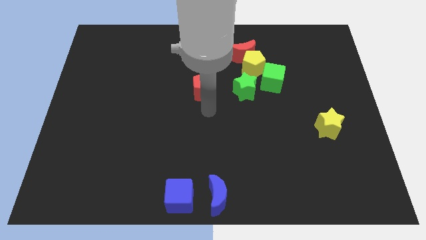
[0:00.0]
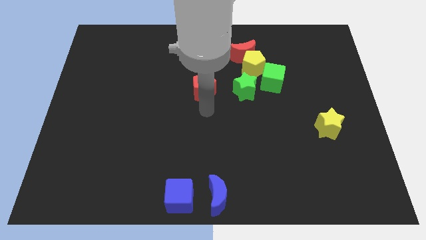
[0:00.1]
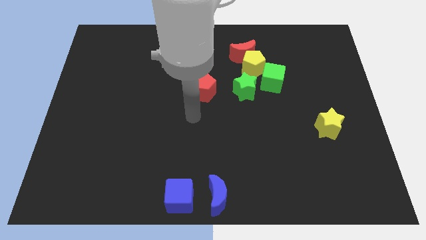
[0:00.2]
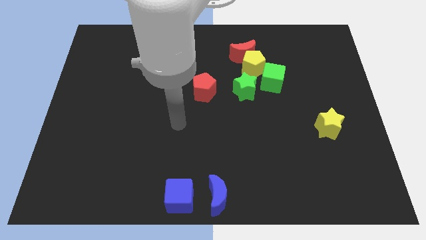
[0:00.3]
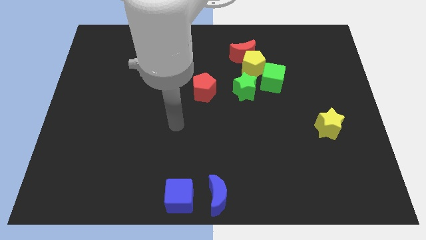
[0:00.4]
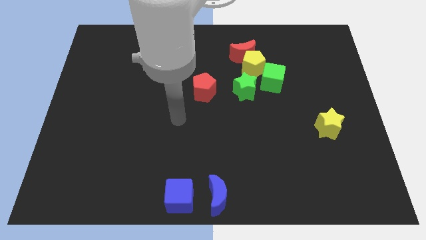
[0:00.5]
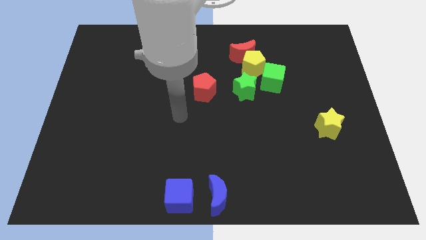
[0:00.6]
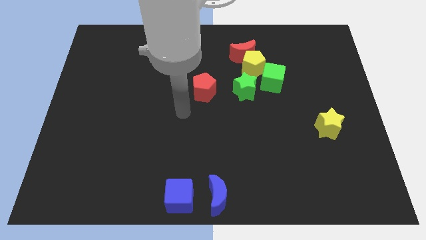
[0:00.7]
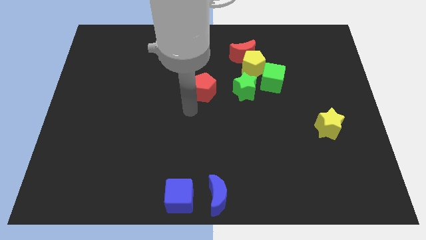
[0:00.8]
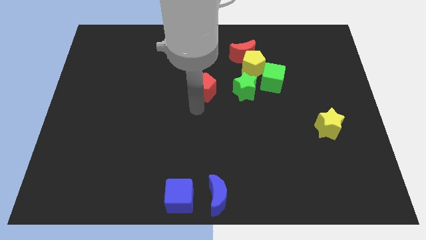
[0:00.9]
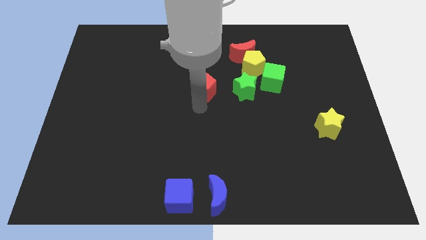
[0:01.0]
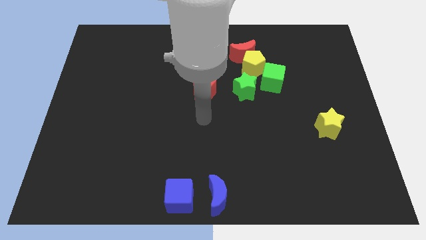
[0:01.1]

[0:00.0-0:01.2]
place arm at the bottom of red pentagon

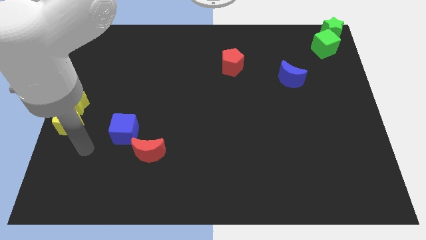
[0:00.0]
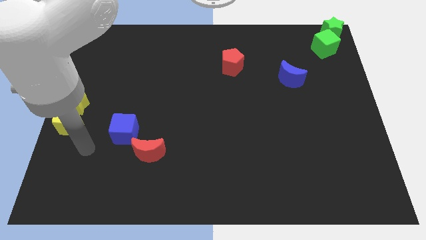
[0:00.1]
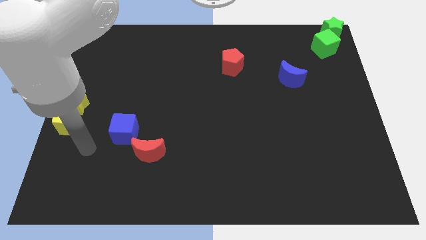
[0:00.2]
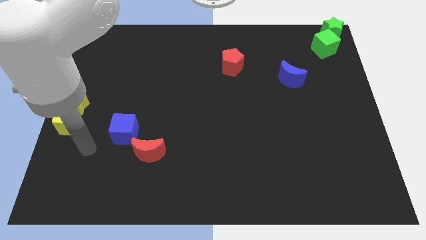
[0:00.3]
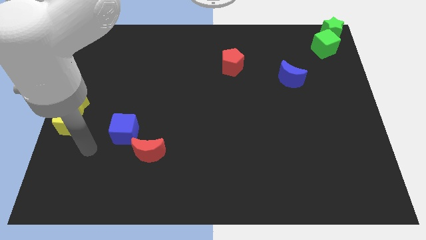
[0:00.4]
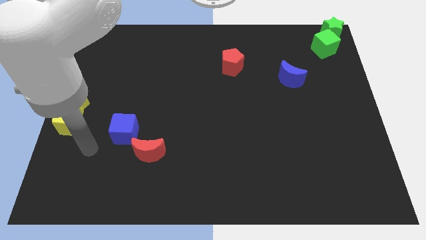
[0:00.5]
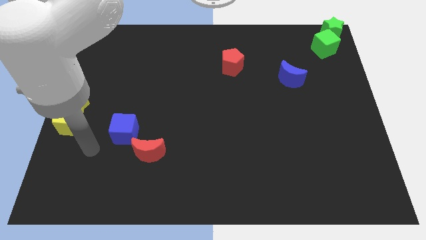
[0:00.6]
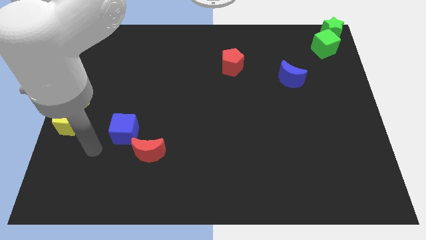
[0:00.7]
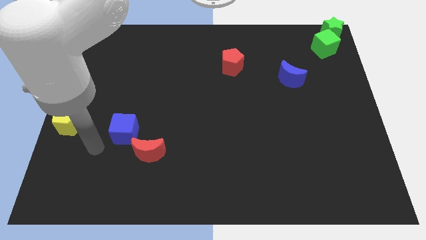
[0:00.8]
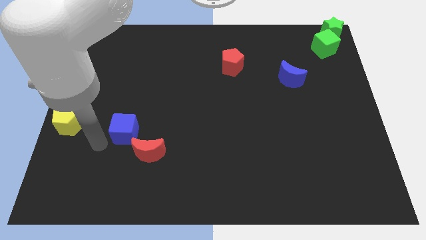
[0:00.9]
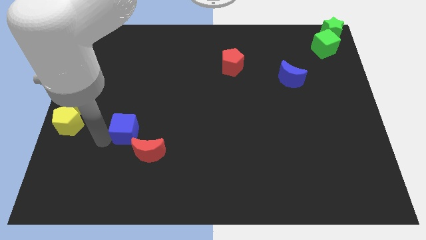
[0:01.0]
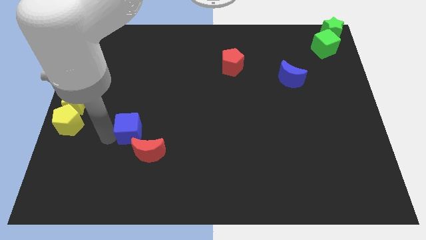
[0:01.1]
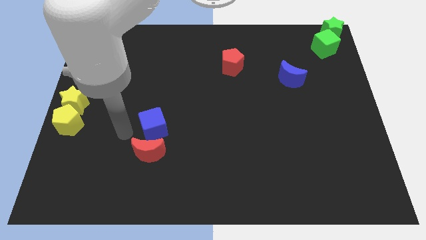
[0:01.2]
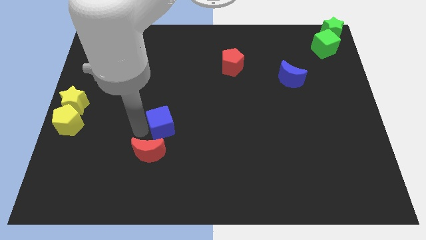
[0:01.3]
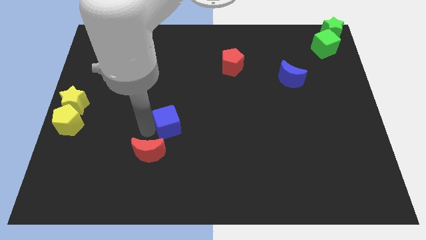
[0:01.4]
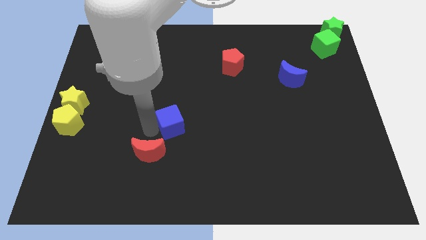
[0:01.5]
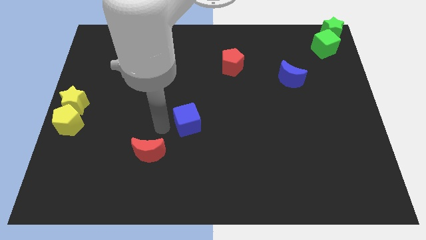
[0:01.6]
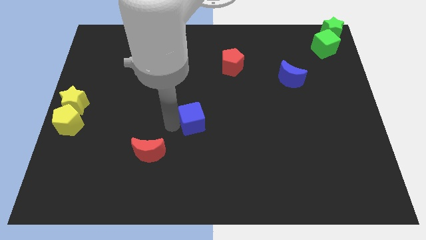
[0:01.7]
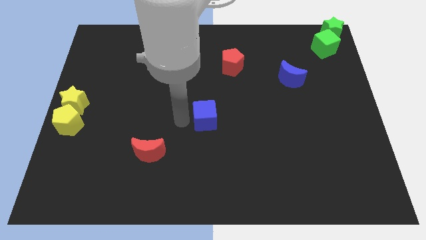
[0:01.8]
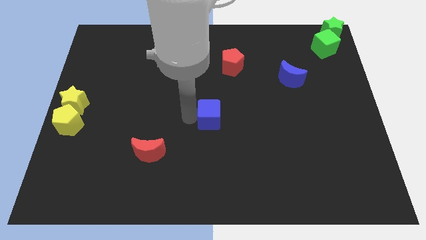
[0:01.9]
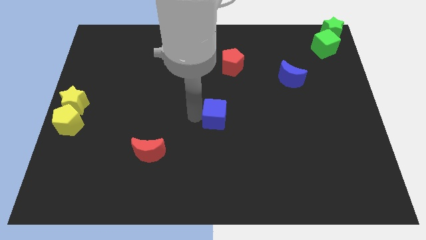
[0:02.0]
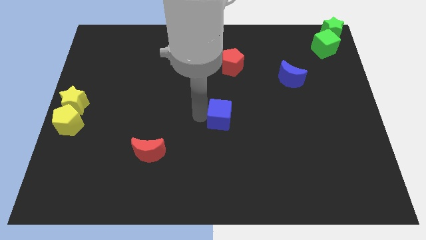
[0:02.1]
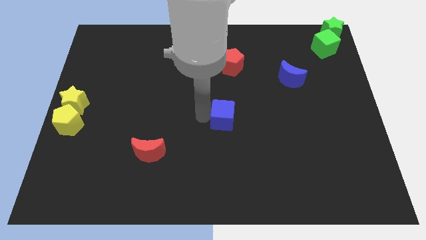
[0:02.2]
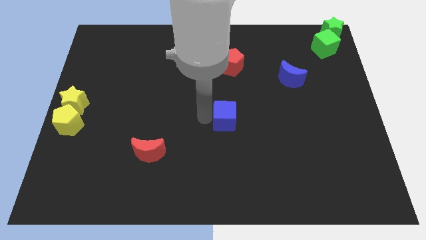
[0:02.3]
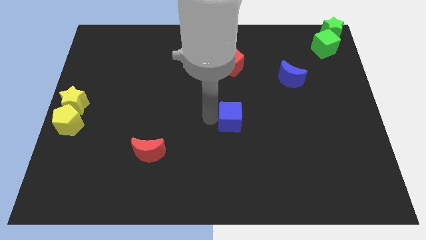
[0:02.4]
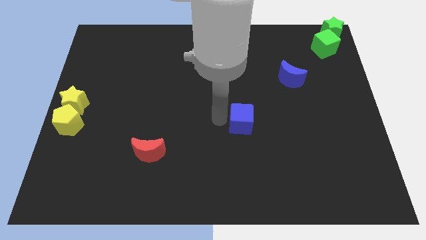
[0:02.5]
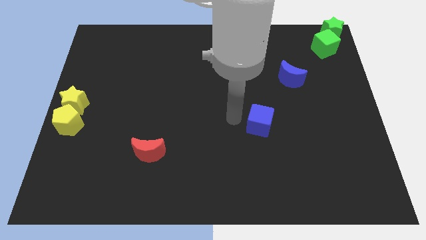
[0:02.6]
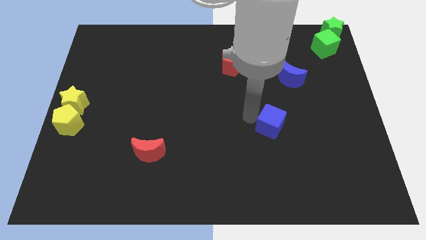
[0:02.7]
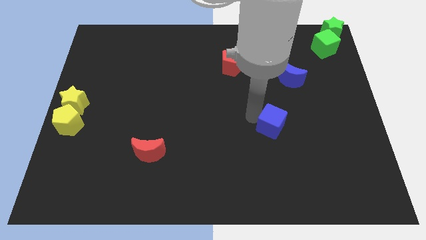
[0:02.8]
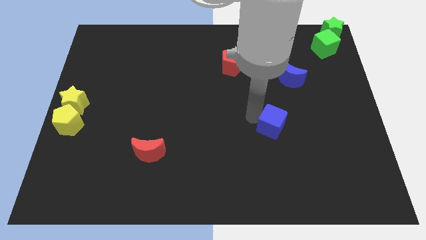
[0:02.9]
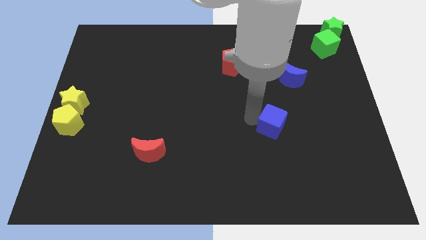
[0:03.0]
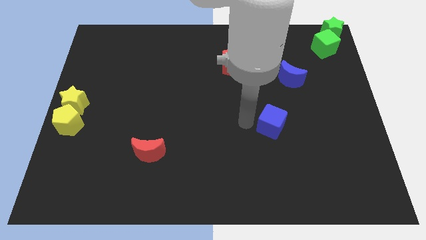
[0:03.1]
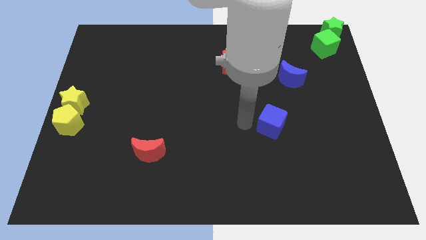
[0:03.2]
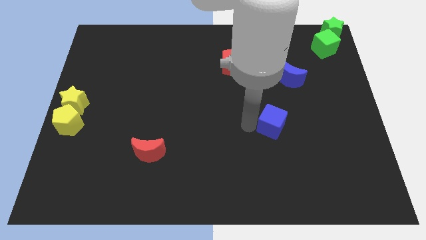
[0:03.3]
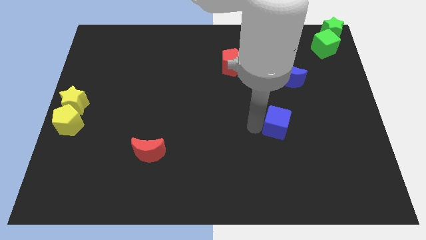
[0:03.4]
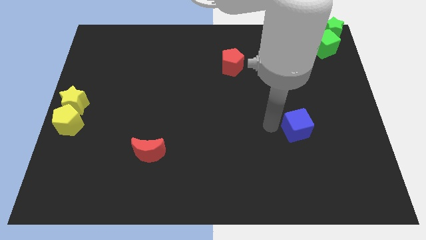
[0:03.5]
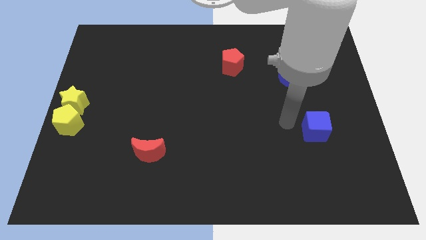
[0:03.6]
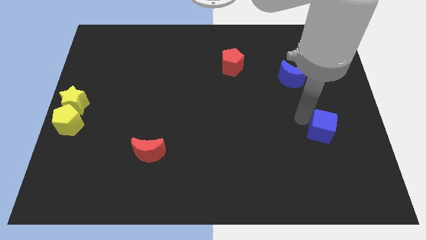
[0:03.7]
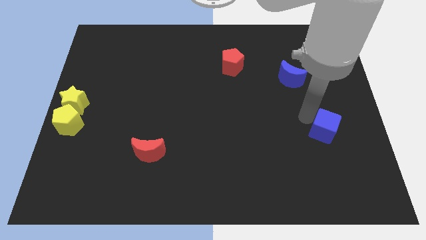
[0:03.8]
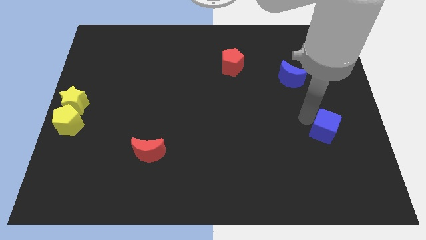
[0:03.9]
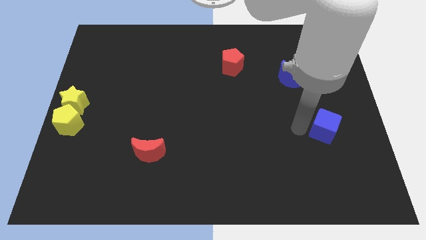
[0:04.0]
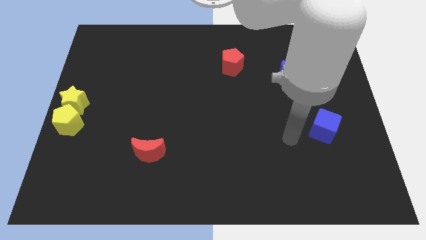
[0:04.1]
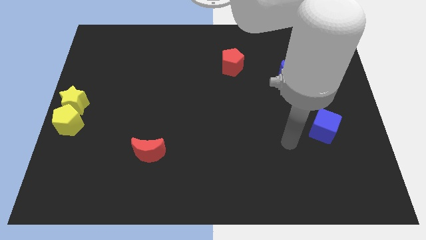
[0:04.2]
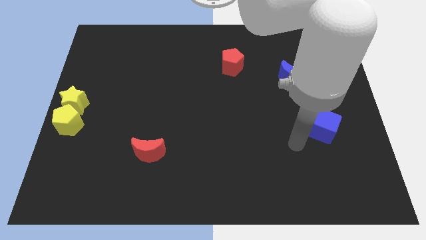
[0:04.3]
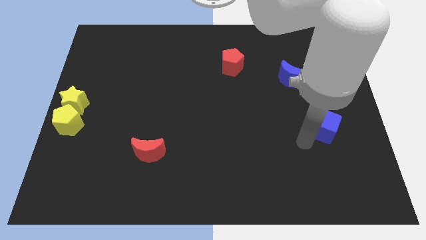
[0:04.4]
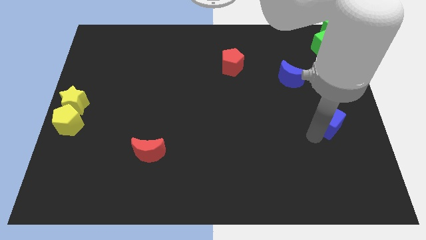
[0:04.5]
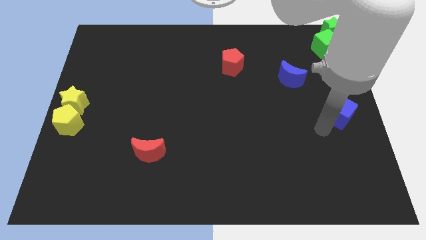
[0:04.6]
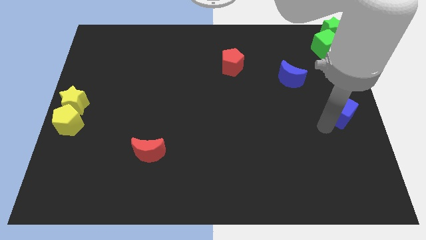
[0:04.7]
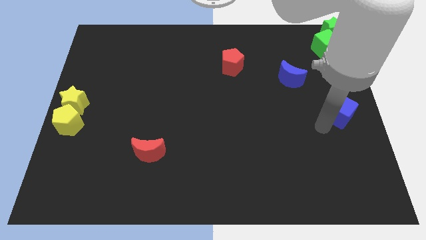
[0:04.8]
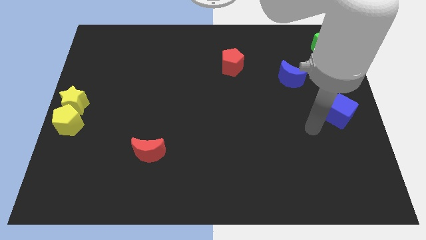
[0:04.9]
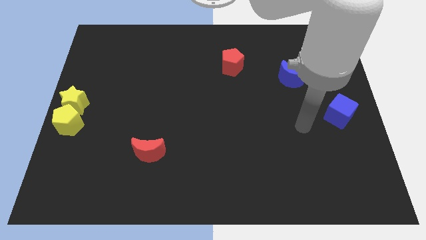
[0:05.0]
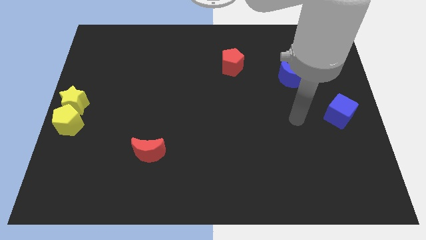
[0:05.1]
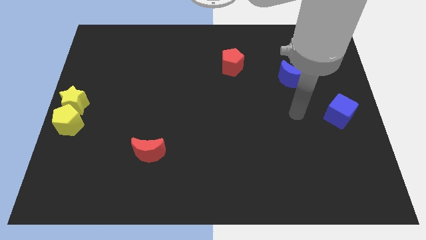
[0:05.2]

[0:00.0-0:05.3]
push the blue cube right center to the board

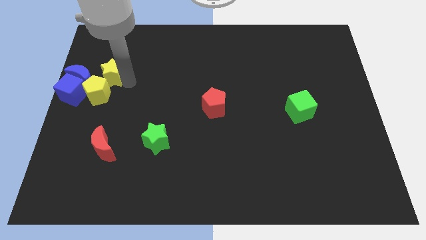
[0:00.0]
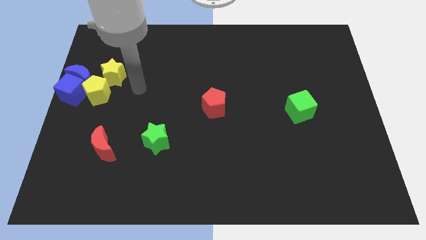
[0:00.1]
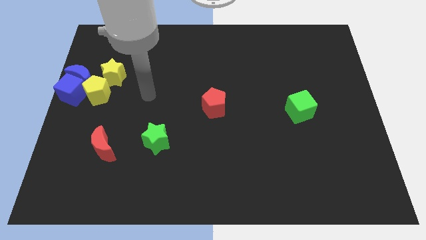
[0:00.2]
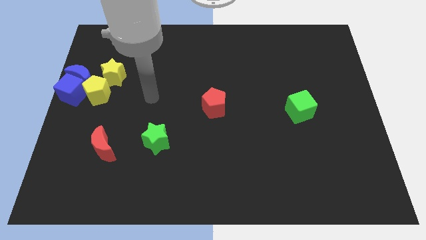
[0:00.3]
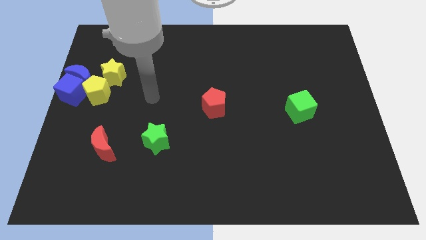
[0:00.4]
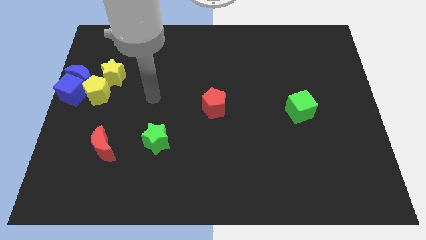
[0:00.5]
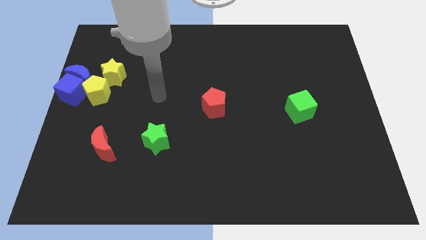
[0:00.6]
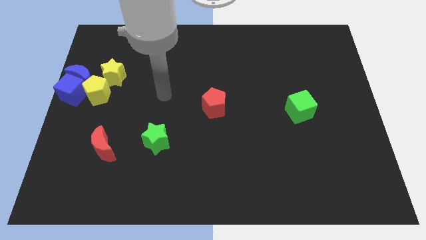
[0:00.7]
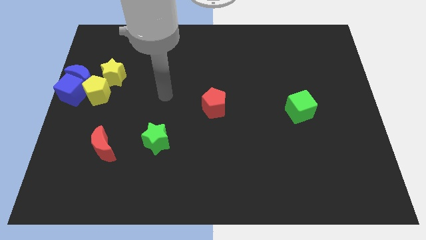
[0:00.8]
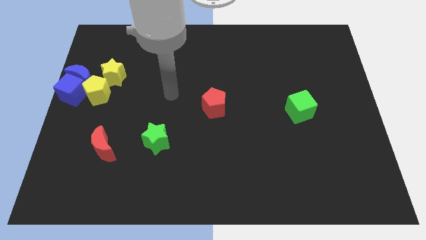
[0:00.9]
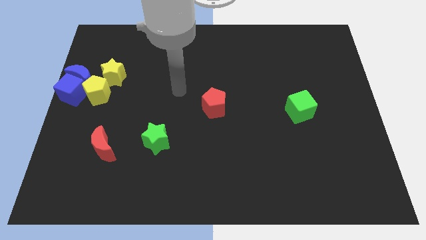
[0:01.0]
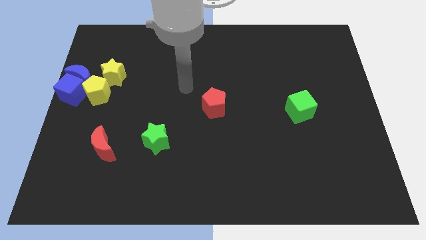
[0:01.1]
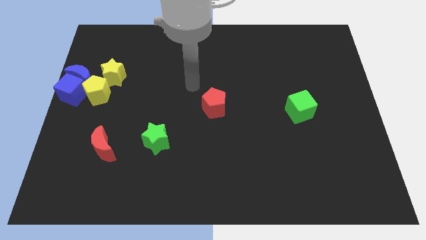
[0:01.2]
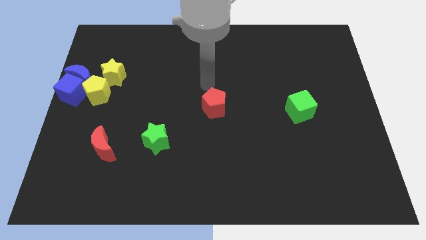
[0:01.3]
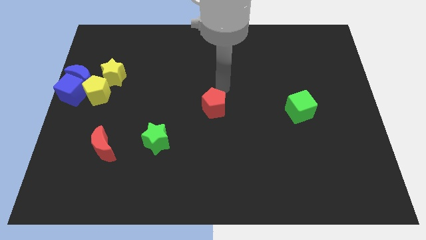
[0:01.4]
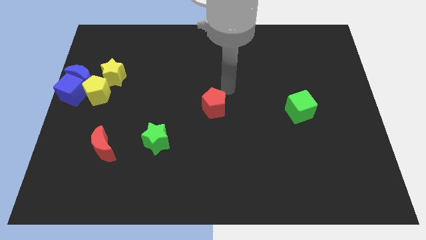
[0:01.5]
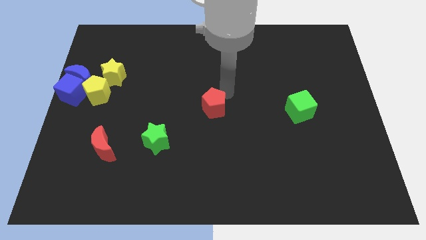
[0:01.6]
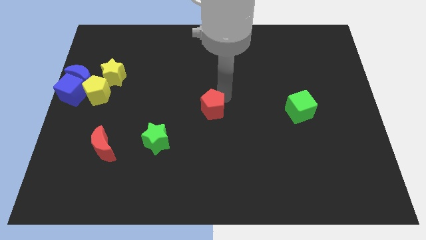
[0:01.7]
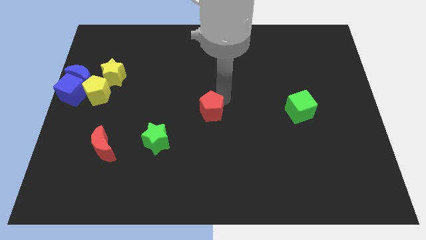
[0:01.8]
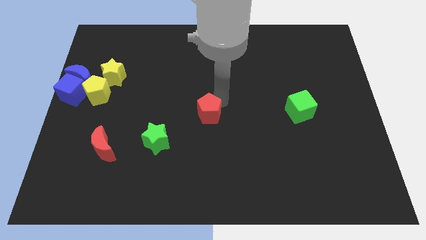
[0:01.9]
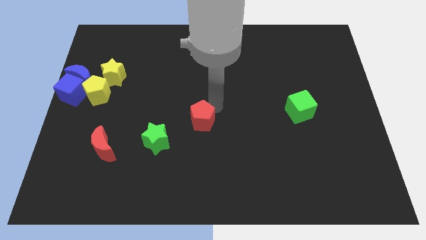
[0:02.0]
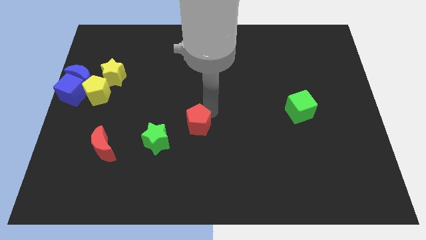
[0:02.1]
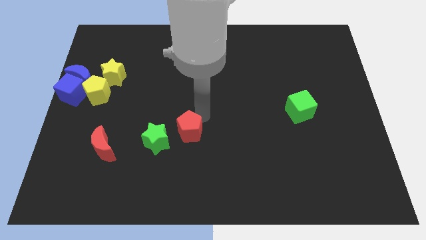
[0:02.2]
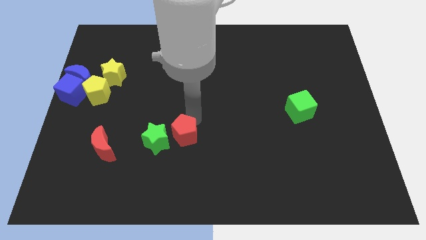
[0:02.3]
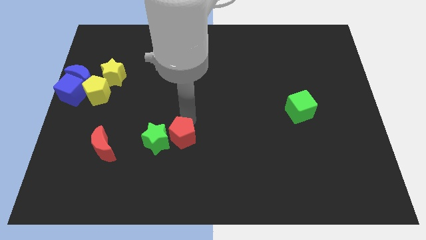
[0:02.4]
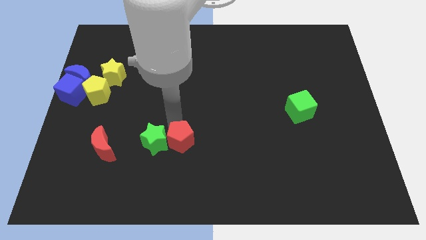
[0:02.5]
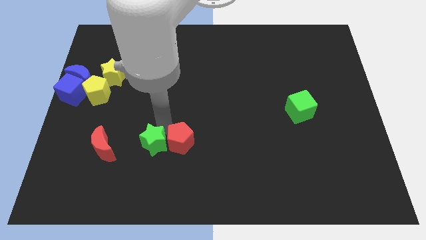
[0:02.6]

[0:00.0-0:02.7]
push the red pentagon into green star
